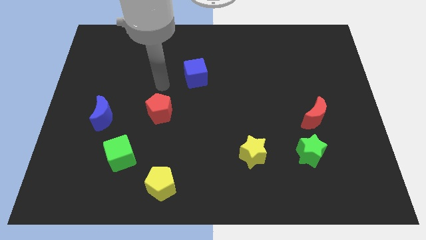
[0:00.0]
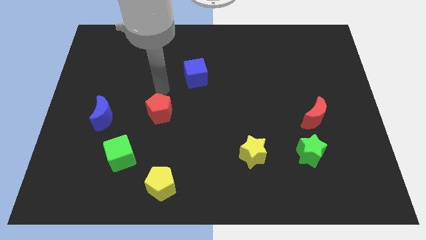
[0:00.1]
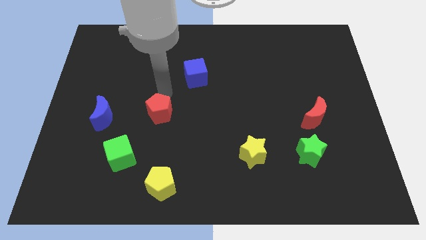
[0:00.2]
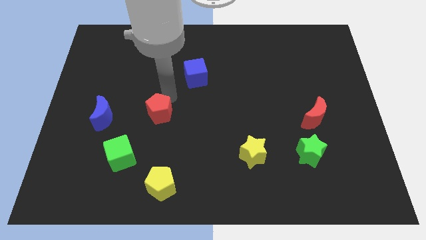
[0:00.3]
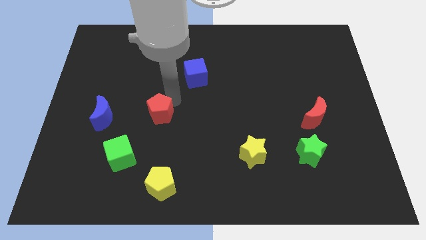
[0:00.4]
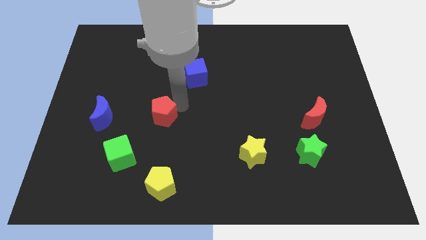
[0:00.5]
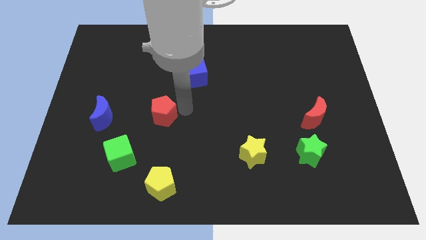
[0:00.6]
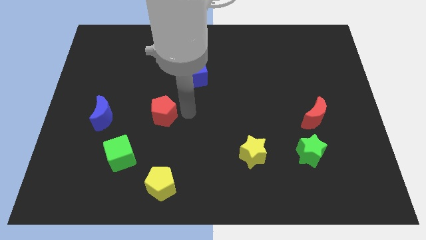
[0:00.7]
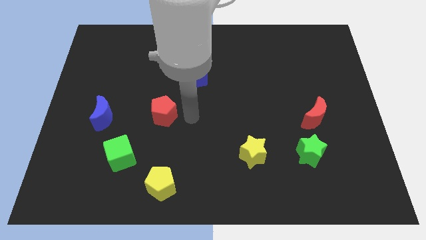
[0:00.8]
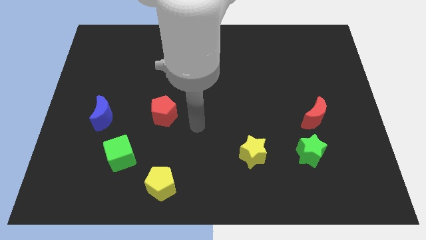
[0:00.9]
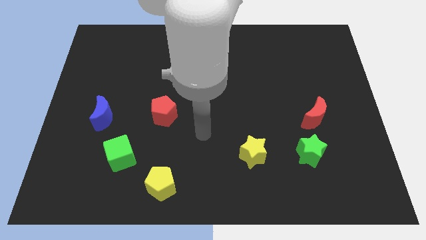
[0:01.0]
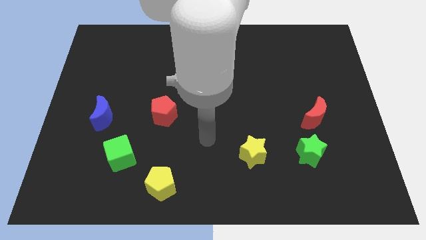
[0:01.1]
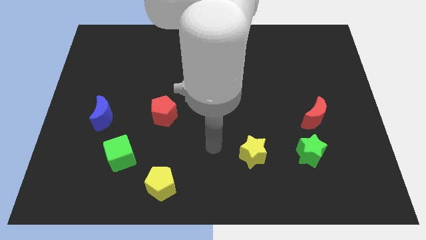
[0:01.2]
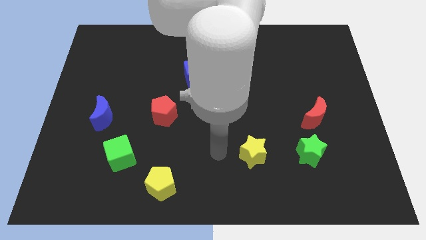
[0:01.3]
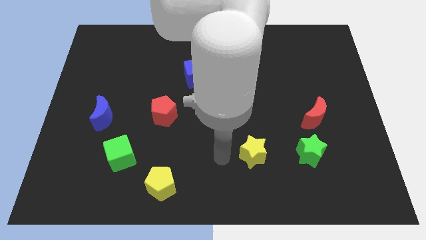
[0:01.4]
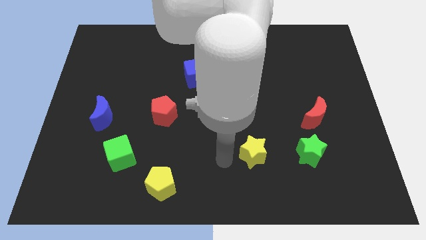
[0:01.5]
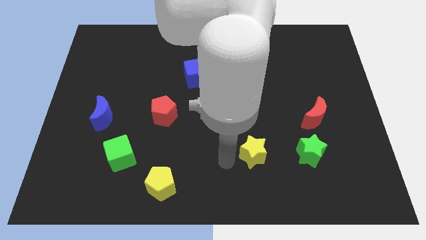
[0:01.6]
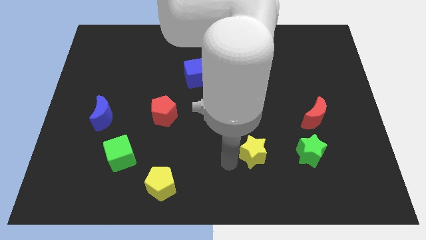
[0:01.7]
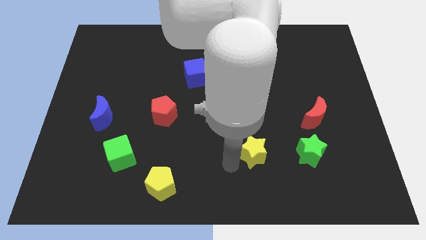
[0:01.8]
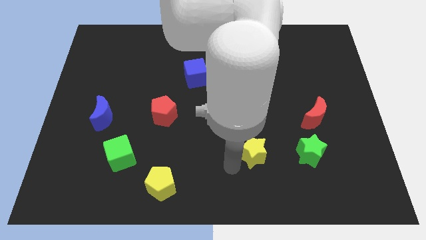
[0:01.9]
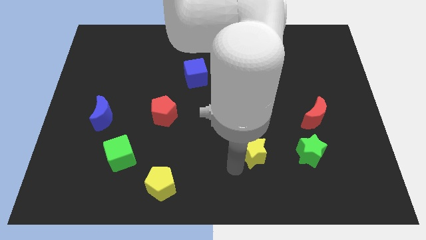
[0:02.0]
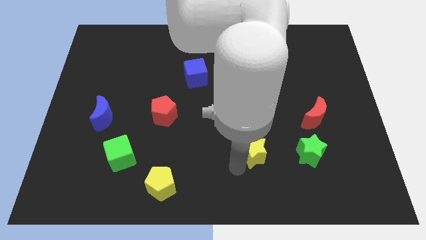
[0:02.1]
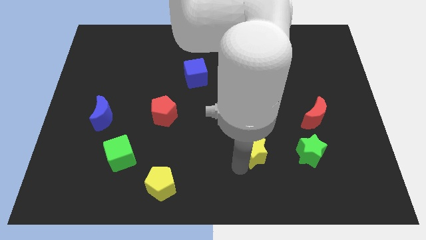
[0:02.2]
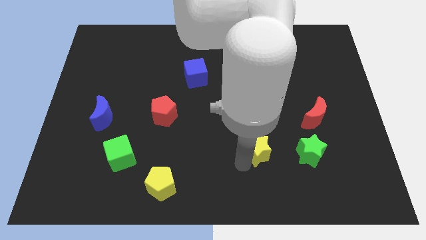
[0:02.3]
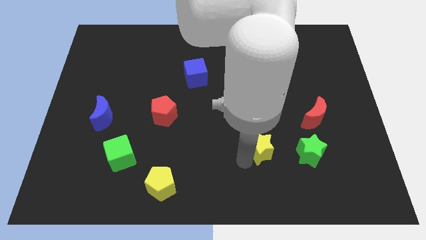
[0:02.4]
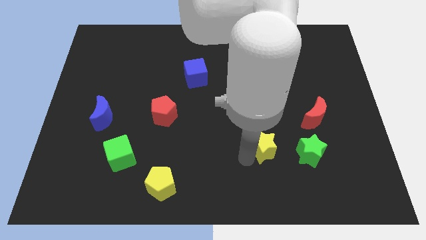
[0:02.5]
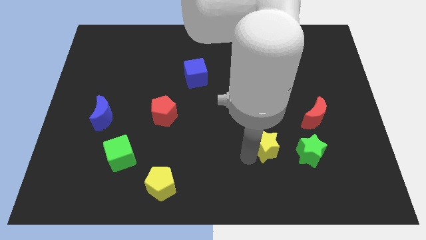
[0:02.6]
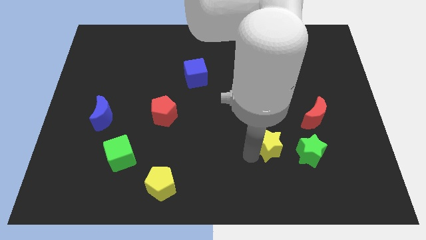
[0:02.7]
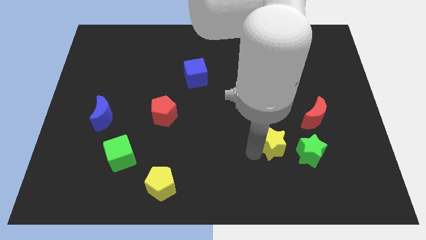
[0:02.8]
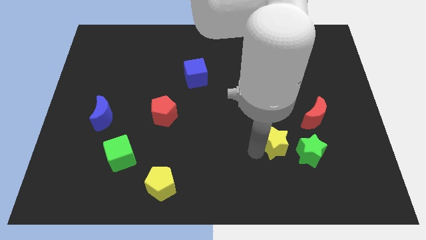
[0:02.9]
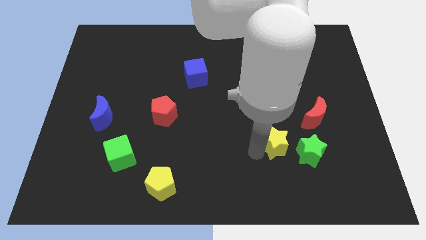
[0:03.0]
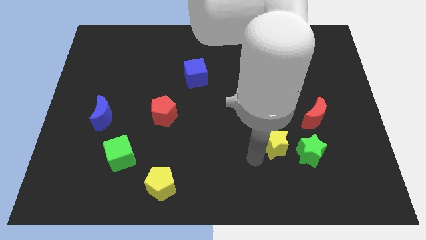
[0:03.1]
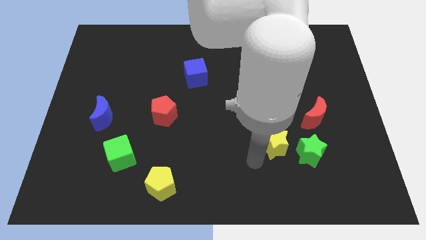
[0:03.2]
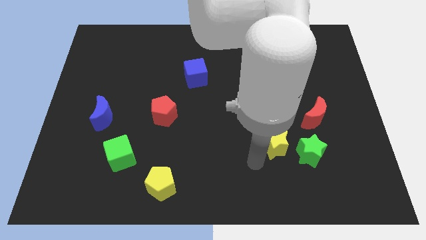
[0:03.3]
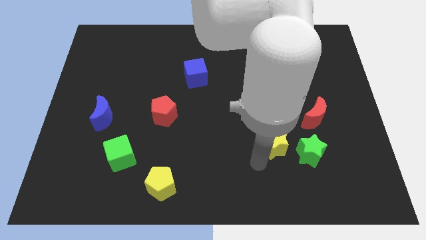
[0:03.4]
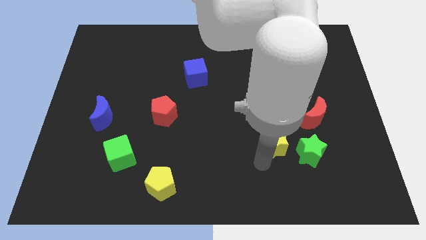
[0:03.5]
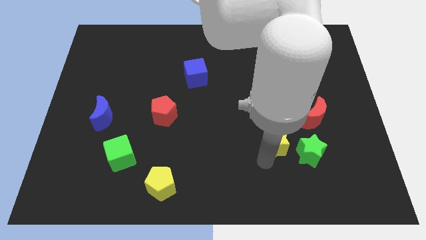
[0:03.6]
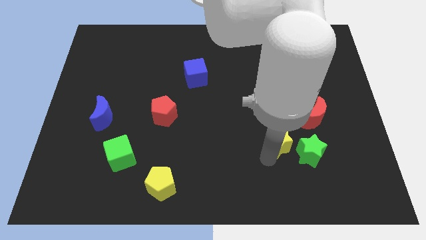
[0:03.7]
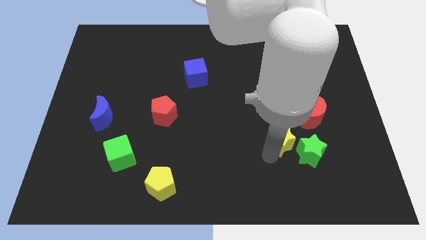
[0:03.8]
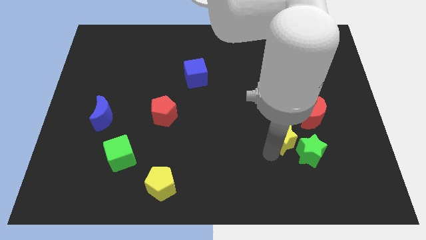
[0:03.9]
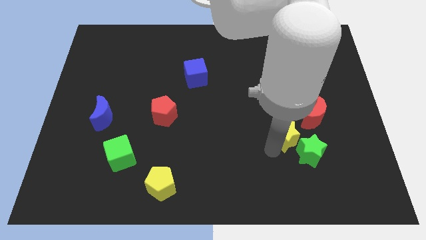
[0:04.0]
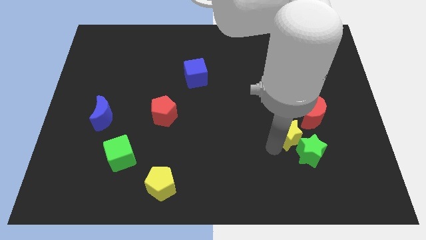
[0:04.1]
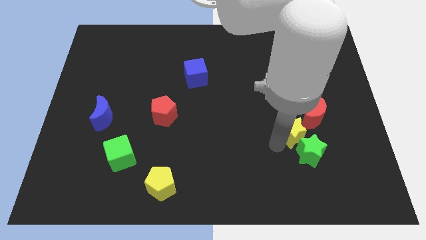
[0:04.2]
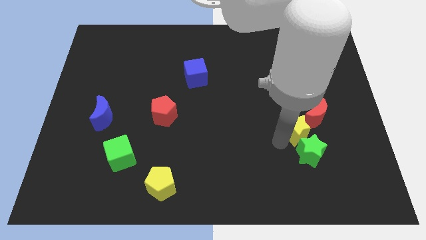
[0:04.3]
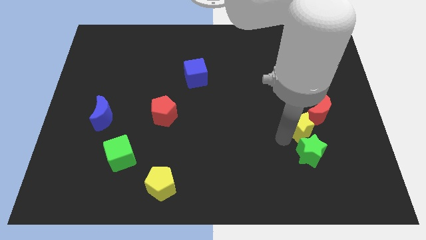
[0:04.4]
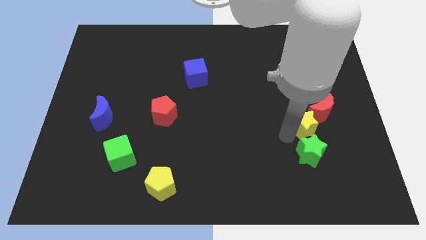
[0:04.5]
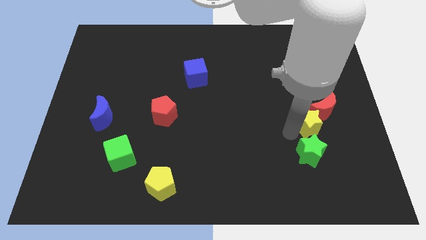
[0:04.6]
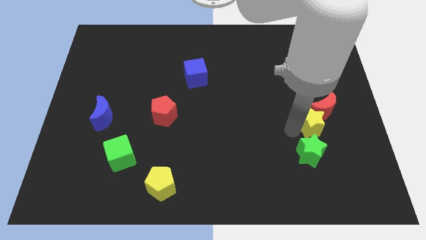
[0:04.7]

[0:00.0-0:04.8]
slide the yellow star towards the red moon

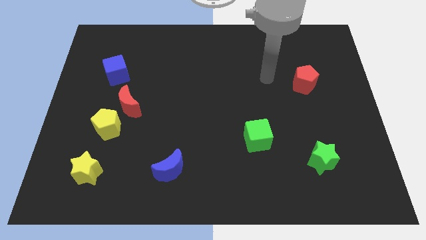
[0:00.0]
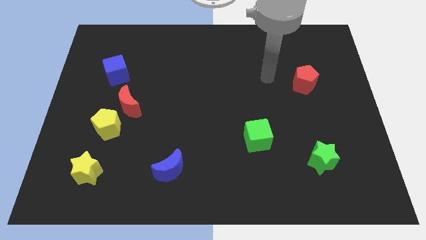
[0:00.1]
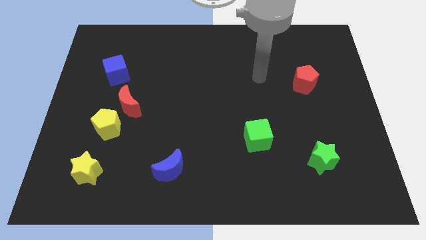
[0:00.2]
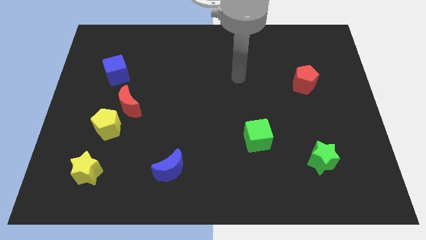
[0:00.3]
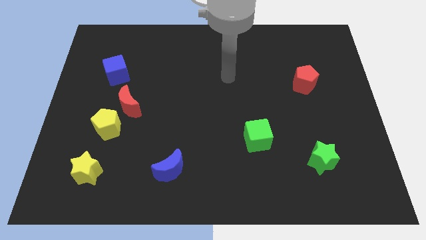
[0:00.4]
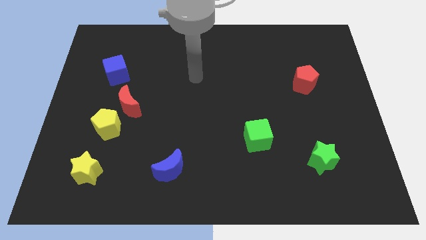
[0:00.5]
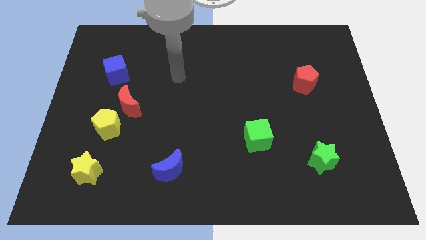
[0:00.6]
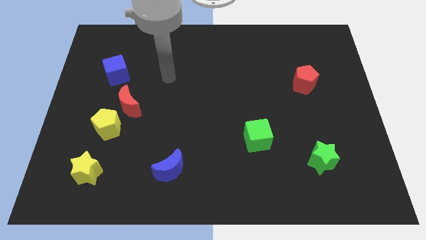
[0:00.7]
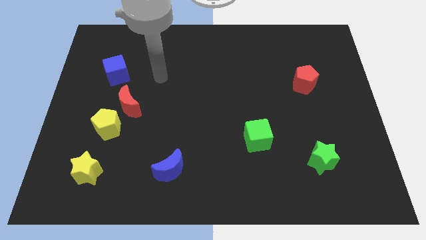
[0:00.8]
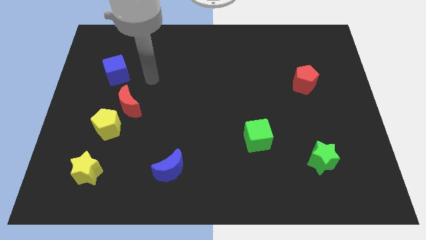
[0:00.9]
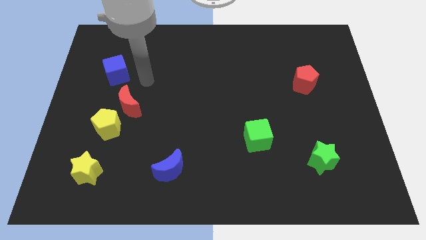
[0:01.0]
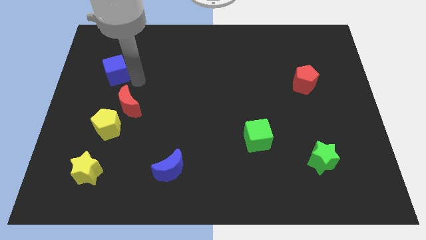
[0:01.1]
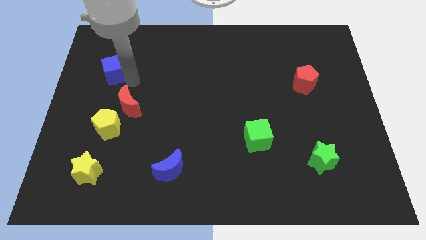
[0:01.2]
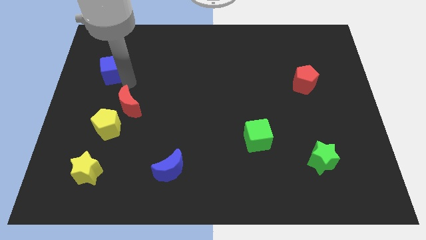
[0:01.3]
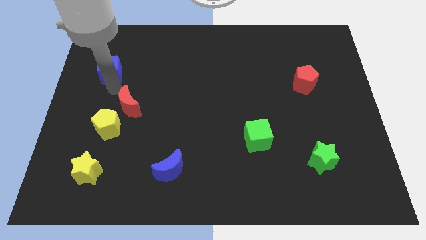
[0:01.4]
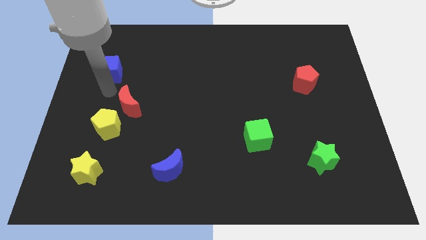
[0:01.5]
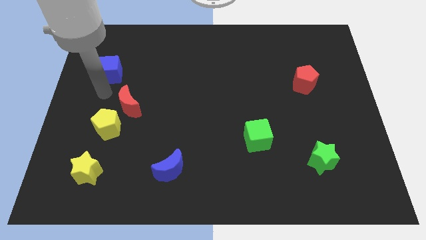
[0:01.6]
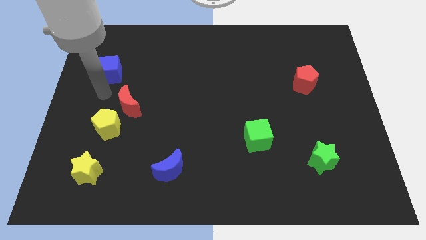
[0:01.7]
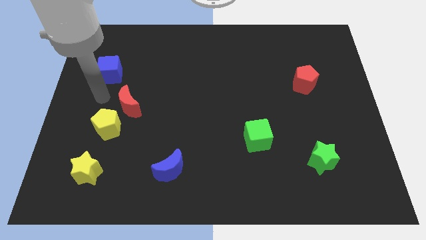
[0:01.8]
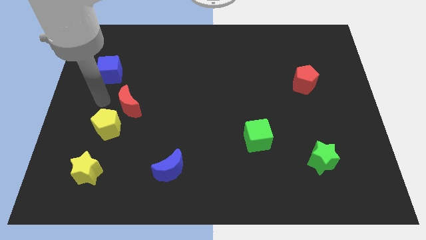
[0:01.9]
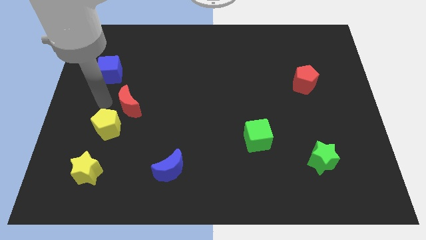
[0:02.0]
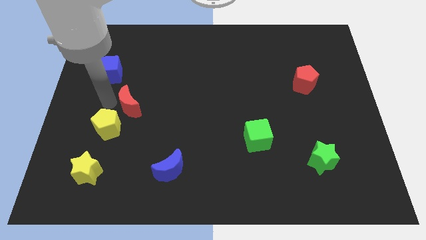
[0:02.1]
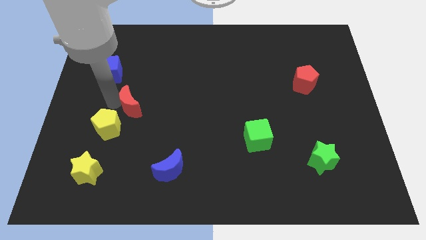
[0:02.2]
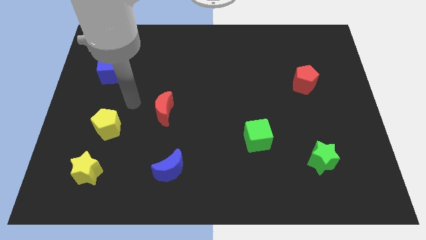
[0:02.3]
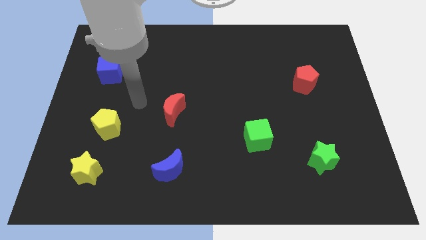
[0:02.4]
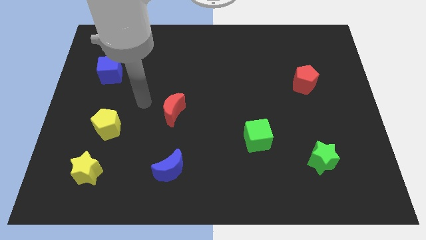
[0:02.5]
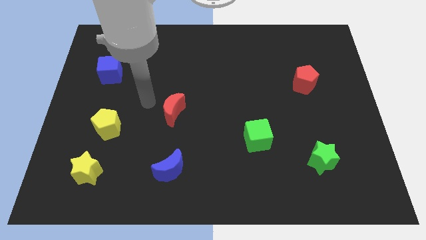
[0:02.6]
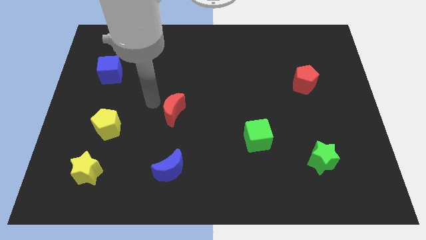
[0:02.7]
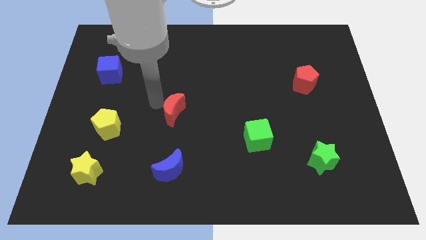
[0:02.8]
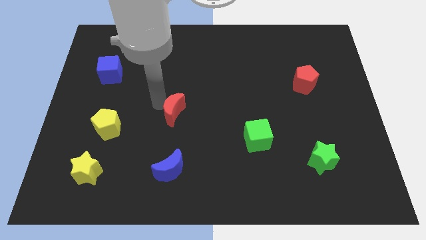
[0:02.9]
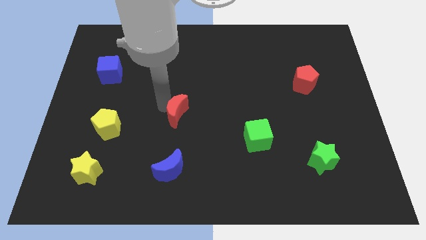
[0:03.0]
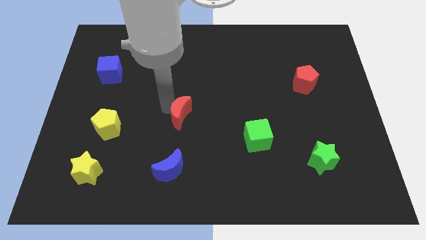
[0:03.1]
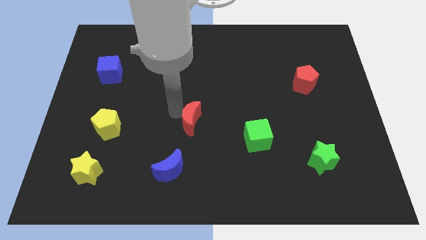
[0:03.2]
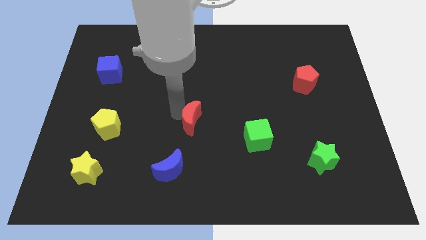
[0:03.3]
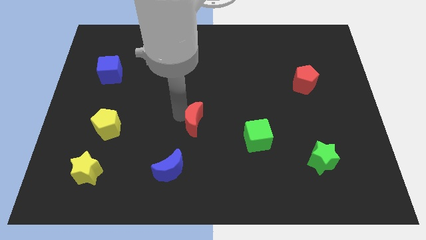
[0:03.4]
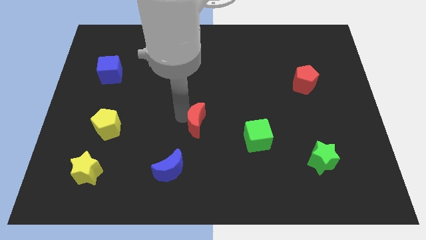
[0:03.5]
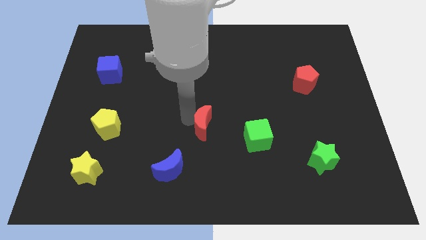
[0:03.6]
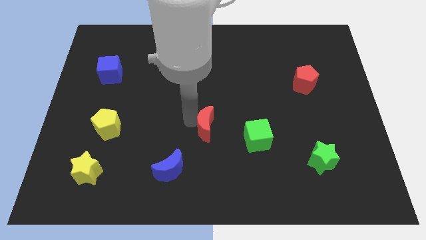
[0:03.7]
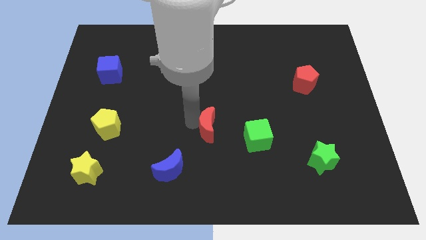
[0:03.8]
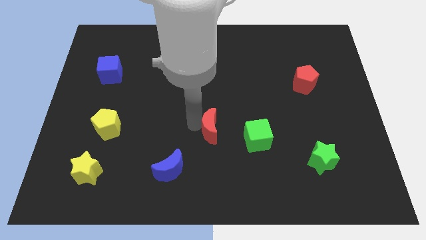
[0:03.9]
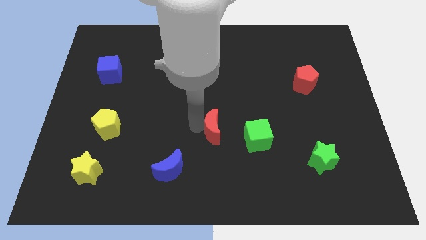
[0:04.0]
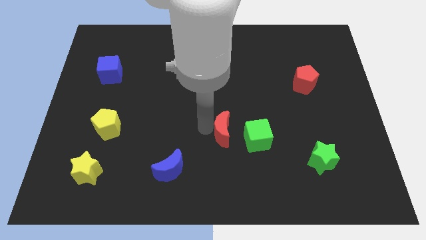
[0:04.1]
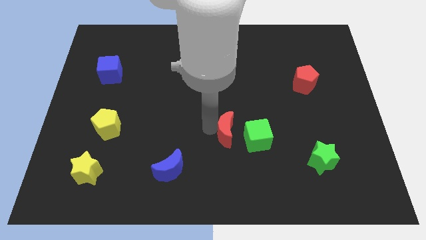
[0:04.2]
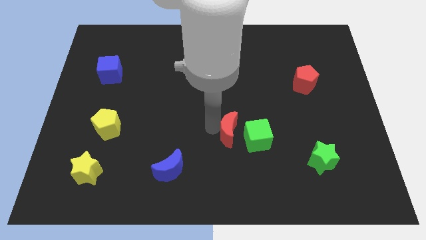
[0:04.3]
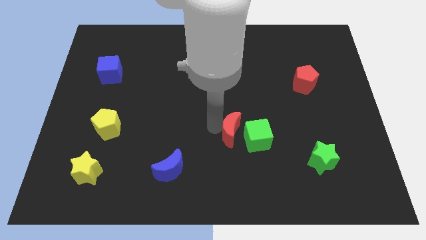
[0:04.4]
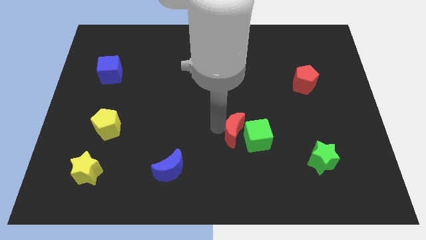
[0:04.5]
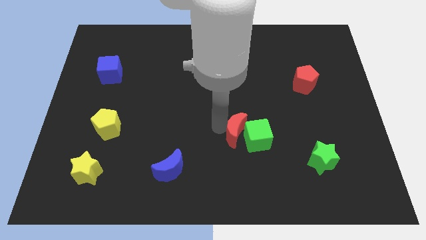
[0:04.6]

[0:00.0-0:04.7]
move the red moon next to the green cube
